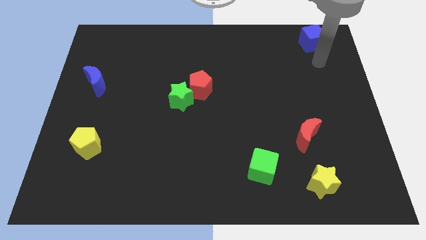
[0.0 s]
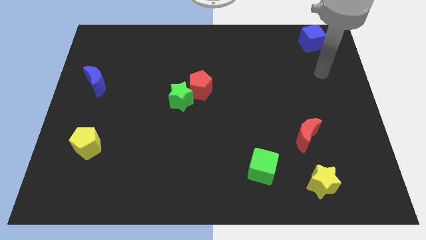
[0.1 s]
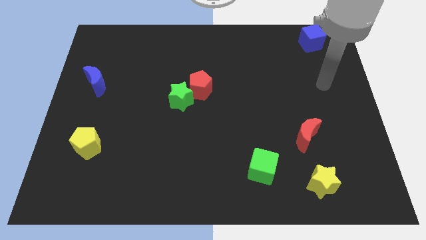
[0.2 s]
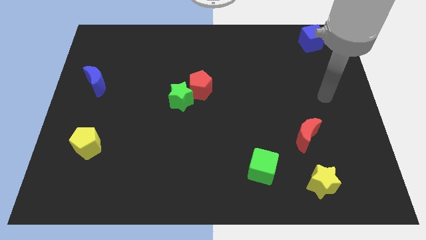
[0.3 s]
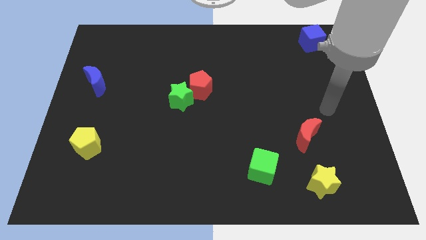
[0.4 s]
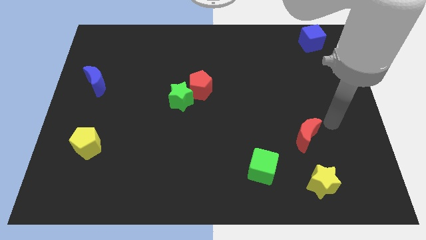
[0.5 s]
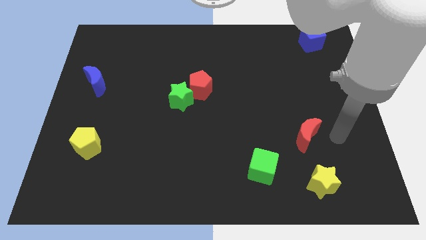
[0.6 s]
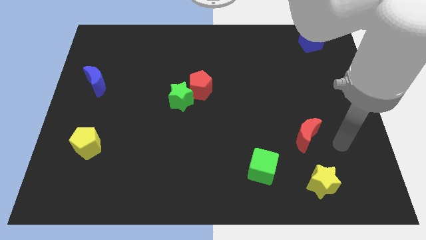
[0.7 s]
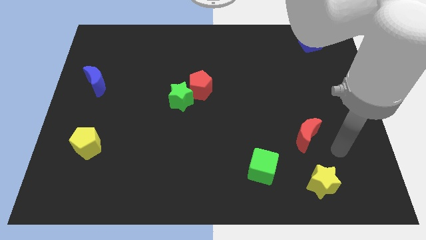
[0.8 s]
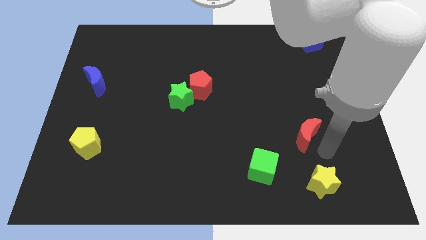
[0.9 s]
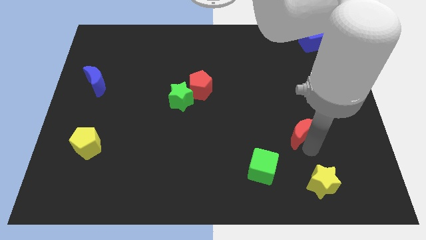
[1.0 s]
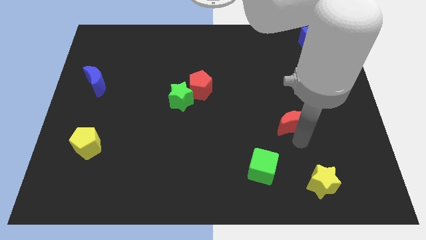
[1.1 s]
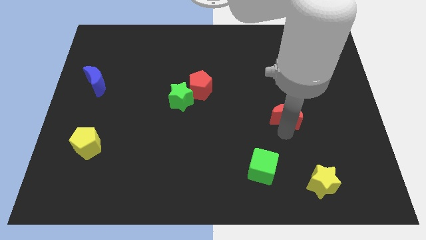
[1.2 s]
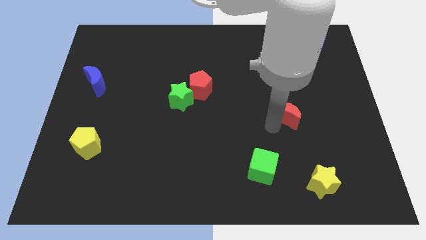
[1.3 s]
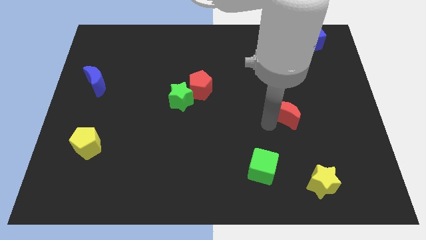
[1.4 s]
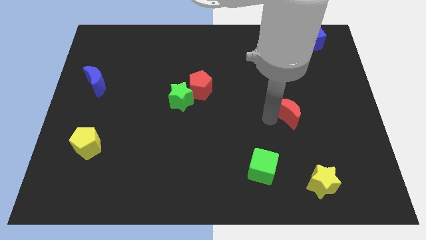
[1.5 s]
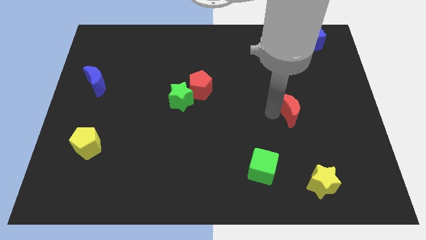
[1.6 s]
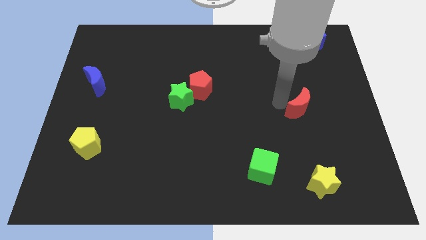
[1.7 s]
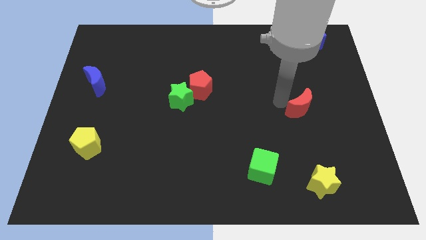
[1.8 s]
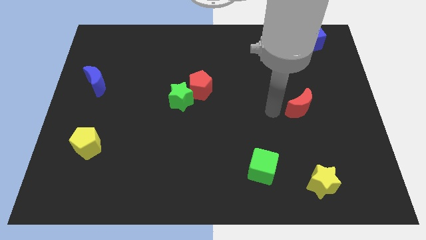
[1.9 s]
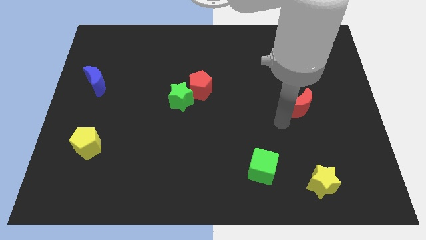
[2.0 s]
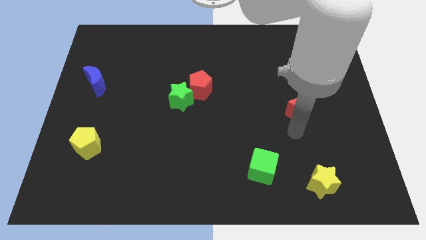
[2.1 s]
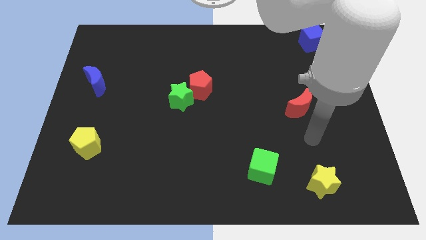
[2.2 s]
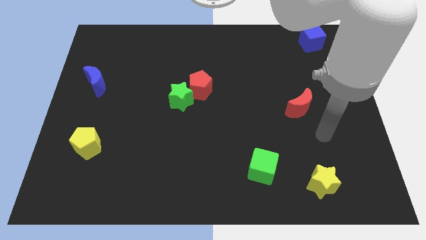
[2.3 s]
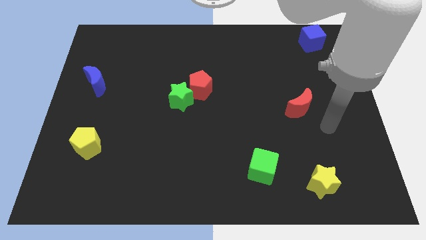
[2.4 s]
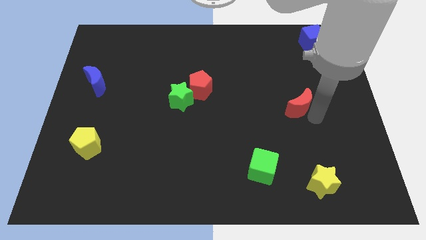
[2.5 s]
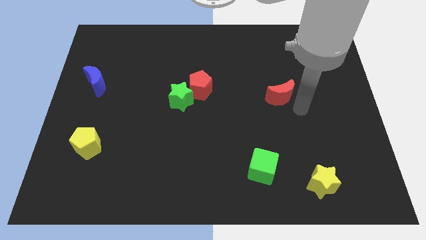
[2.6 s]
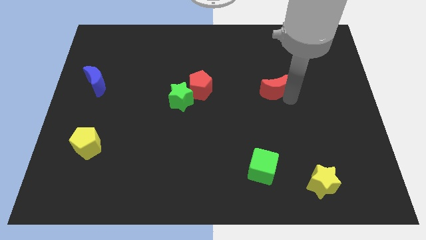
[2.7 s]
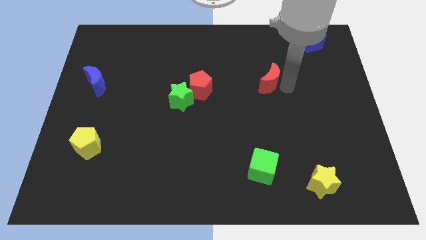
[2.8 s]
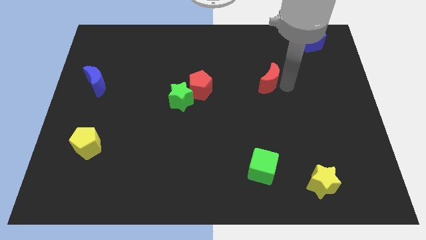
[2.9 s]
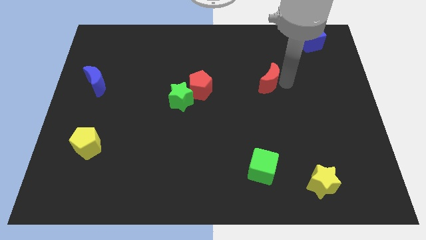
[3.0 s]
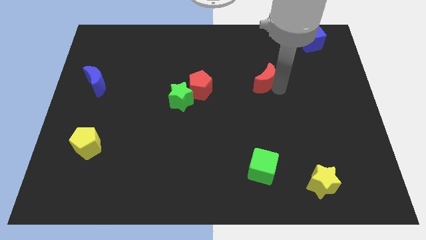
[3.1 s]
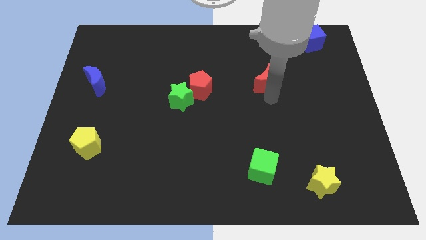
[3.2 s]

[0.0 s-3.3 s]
place the red moon to the right of the red pentagon

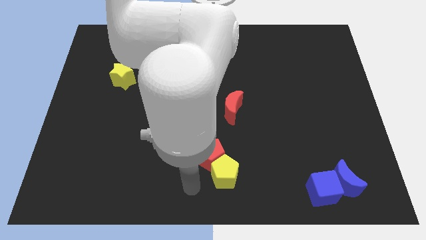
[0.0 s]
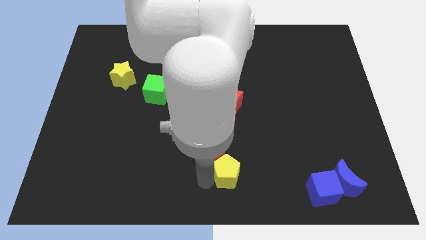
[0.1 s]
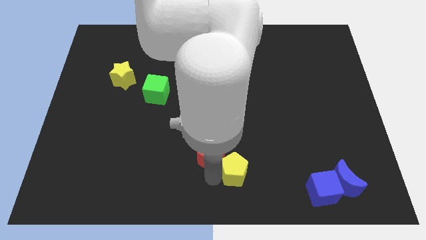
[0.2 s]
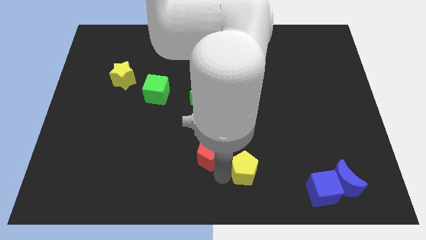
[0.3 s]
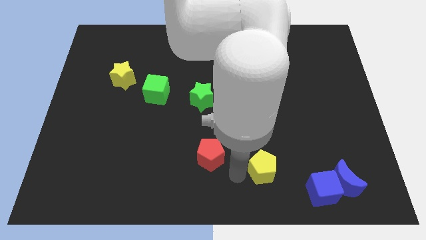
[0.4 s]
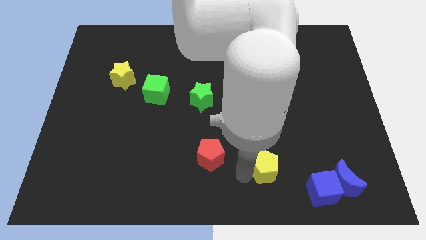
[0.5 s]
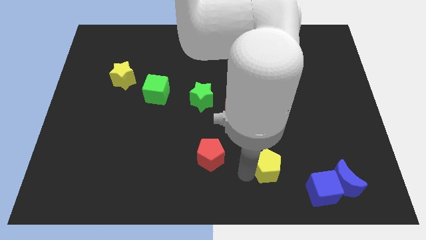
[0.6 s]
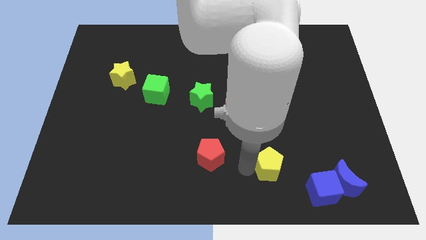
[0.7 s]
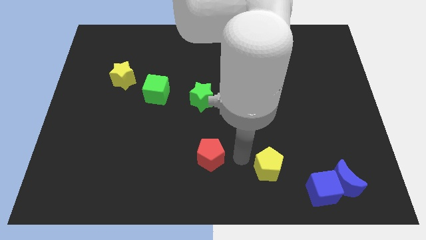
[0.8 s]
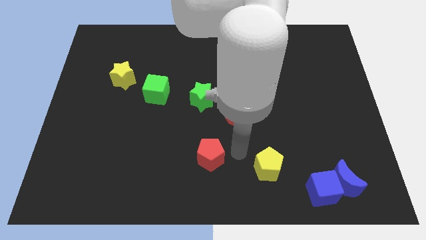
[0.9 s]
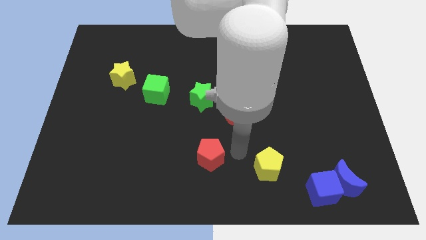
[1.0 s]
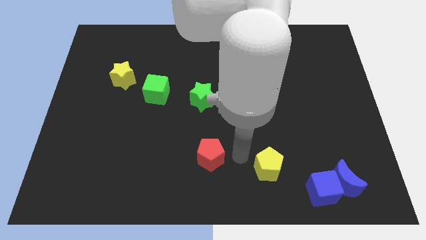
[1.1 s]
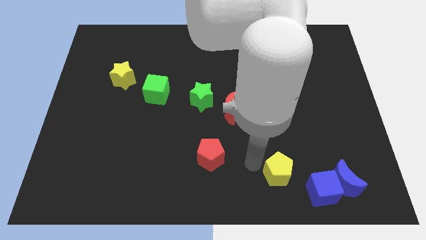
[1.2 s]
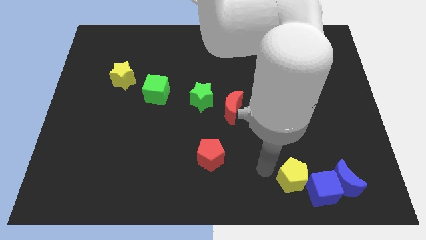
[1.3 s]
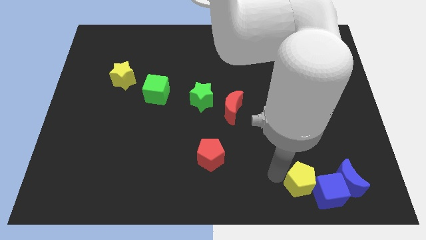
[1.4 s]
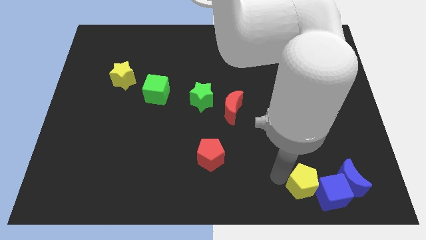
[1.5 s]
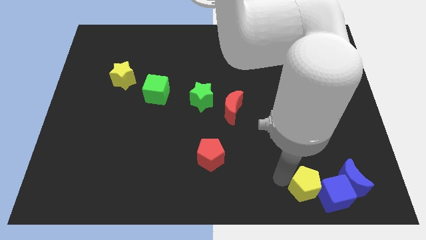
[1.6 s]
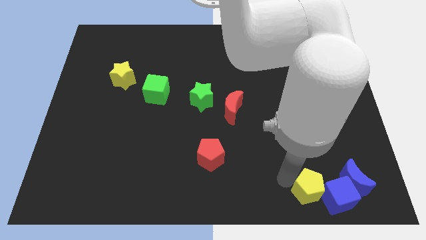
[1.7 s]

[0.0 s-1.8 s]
push the yellow pentagon into the blue cube

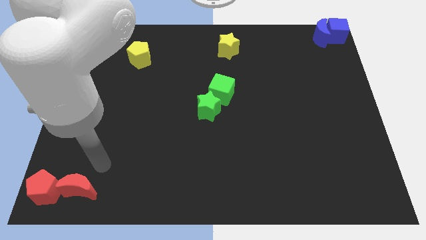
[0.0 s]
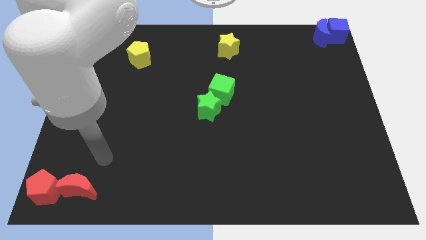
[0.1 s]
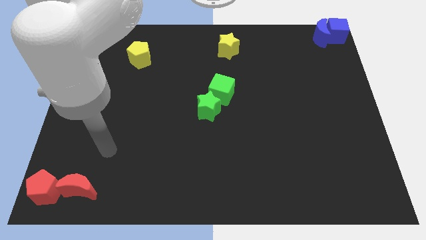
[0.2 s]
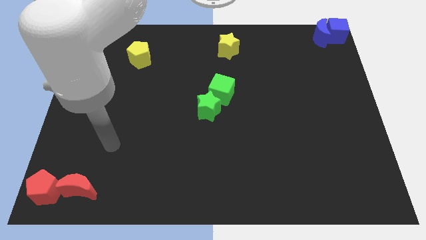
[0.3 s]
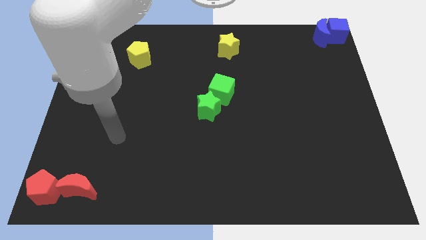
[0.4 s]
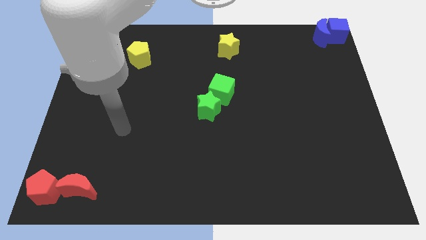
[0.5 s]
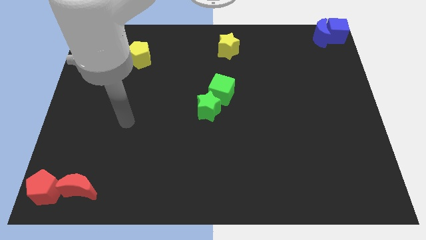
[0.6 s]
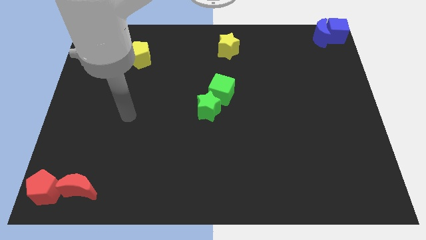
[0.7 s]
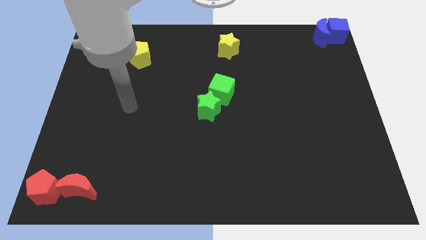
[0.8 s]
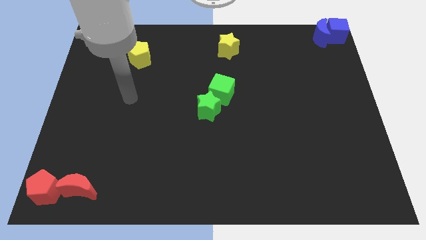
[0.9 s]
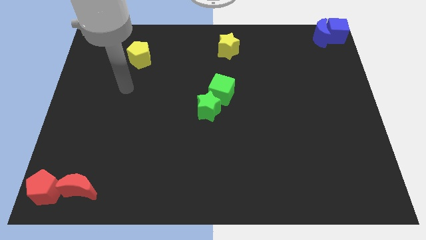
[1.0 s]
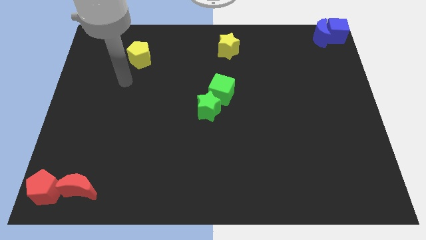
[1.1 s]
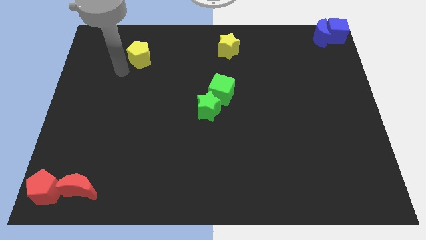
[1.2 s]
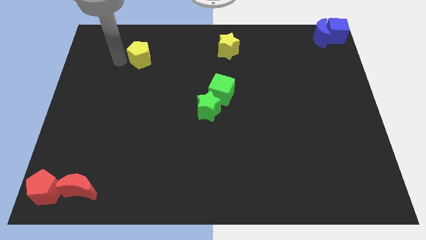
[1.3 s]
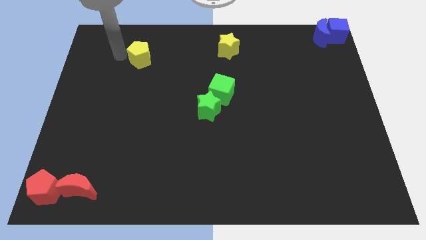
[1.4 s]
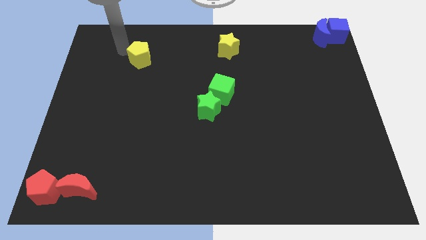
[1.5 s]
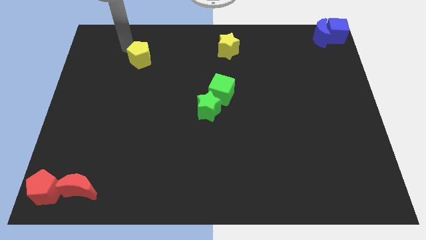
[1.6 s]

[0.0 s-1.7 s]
move your hand on top of the yellow pentagon

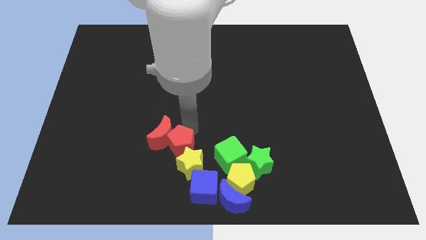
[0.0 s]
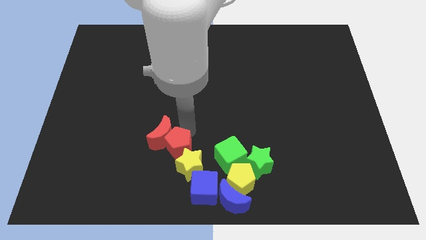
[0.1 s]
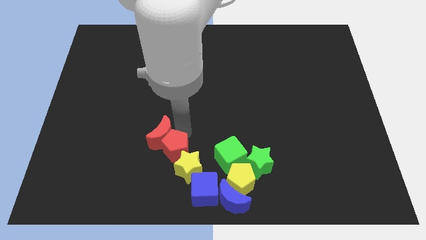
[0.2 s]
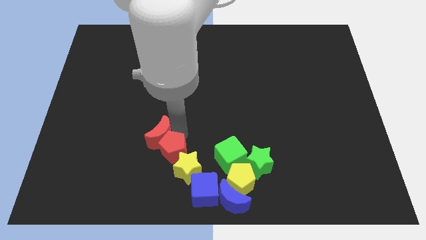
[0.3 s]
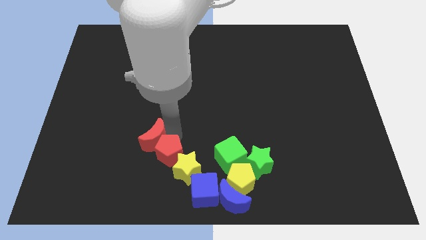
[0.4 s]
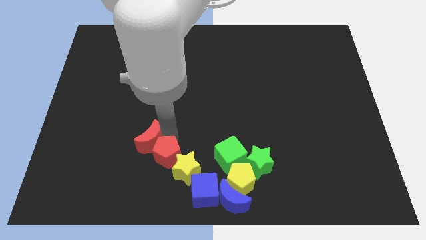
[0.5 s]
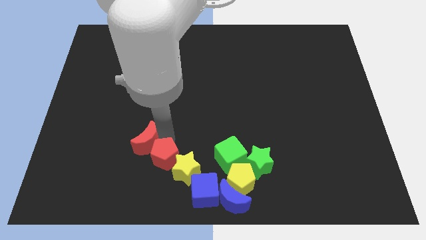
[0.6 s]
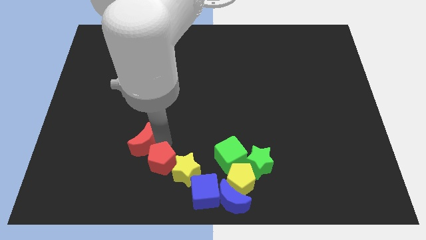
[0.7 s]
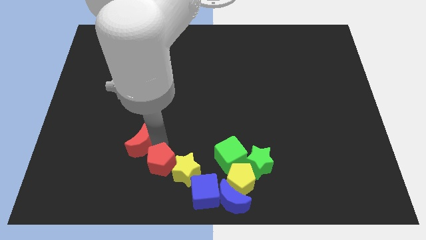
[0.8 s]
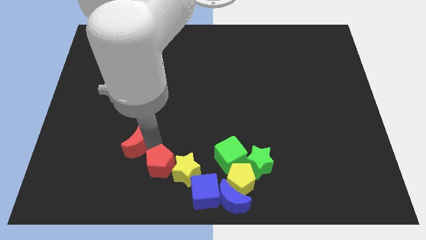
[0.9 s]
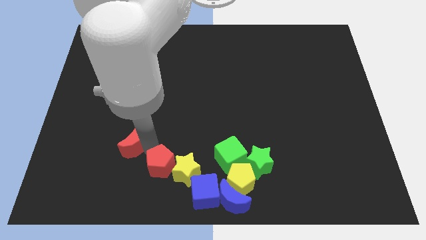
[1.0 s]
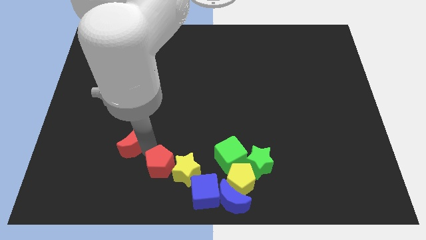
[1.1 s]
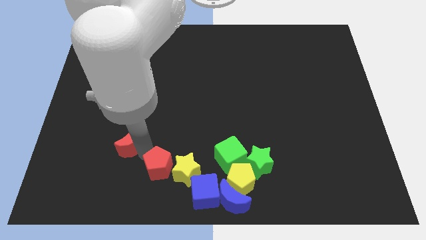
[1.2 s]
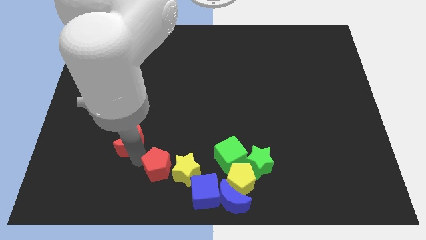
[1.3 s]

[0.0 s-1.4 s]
place the red pentagon in between the red crescent and yellow star to form a diagnoal line

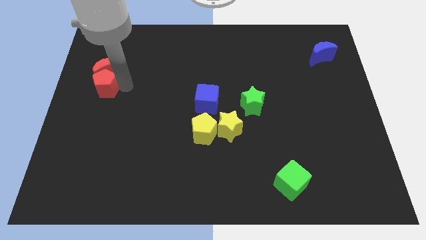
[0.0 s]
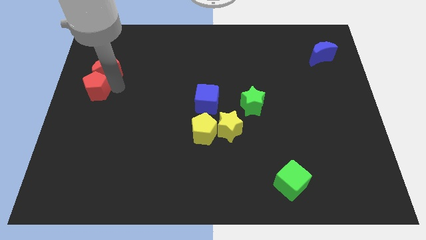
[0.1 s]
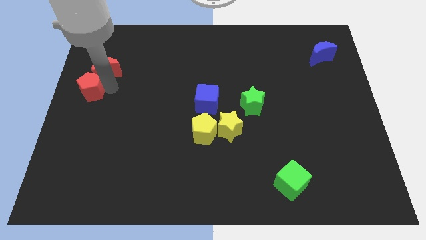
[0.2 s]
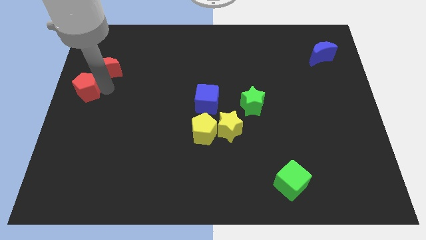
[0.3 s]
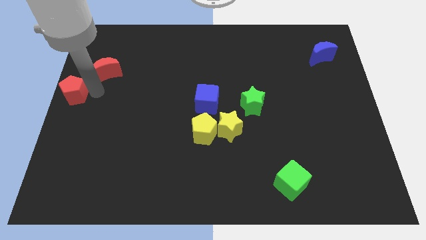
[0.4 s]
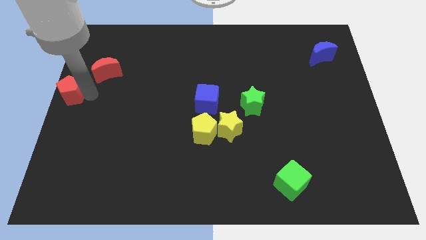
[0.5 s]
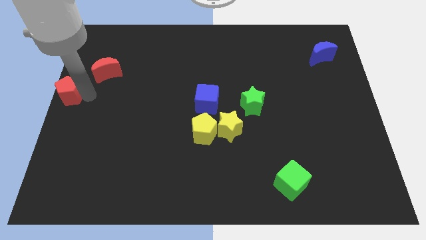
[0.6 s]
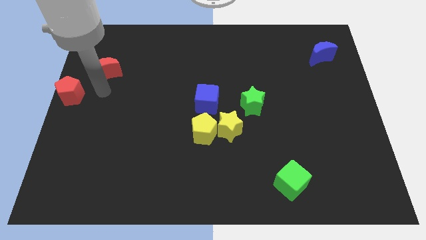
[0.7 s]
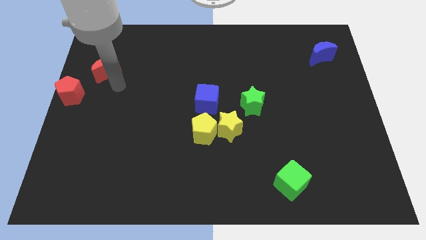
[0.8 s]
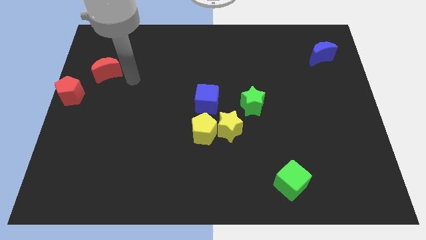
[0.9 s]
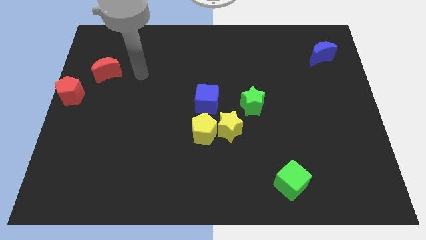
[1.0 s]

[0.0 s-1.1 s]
separate the red pentagon from red crescent
